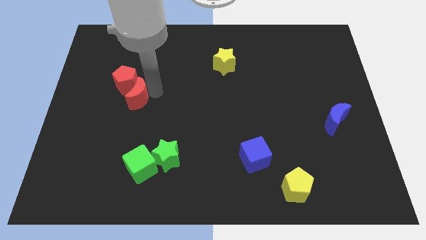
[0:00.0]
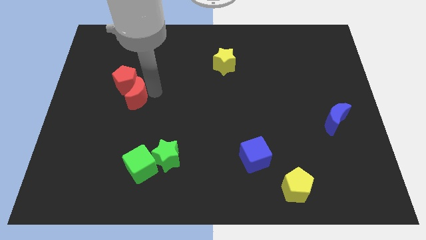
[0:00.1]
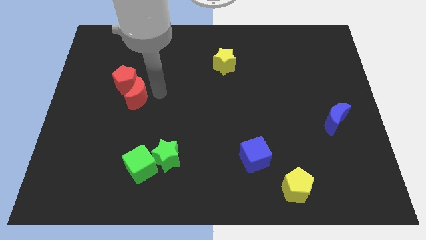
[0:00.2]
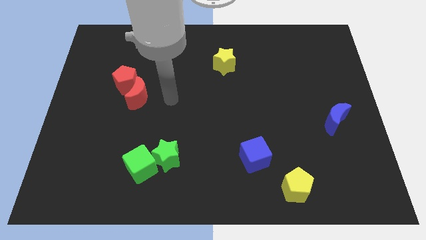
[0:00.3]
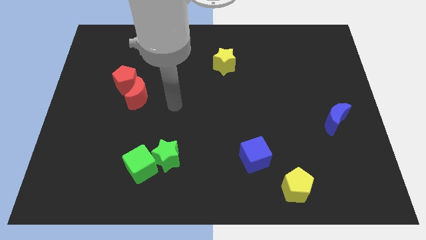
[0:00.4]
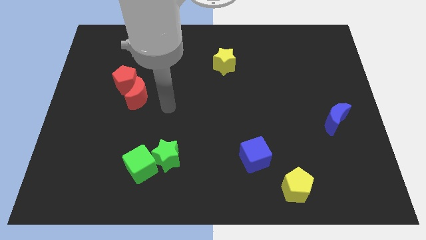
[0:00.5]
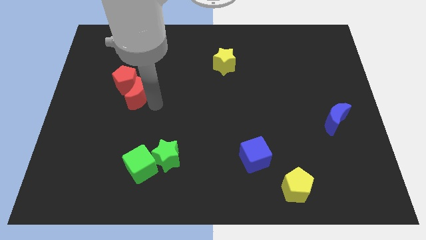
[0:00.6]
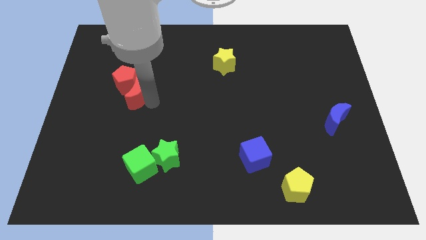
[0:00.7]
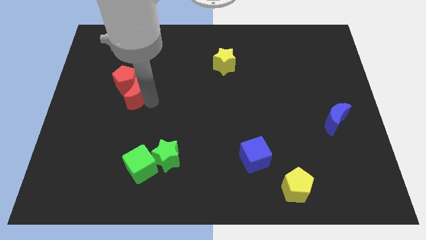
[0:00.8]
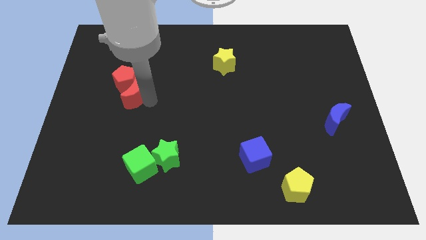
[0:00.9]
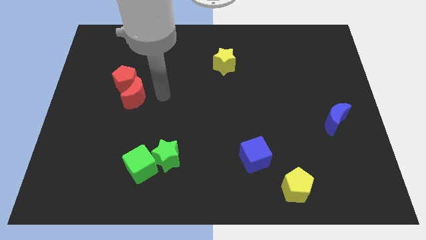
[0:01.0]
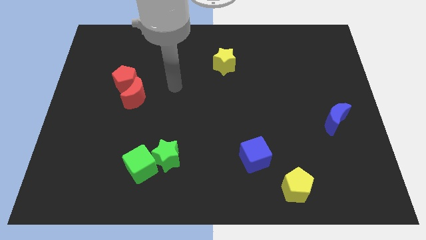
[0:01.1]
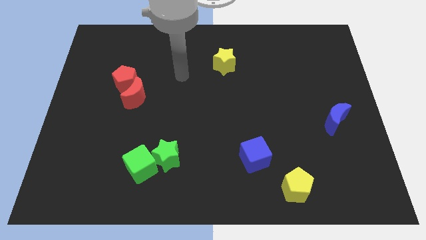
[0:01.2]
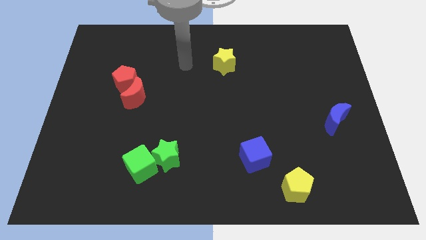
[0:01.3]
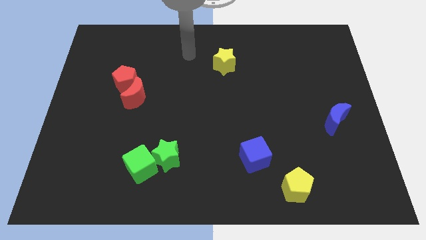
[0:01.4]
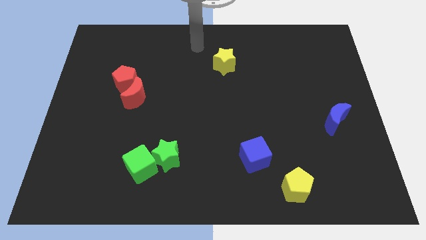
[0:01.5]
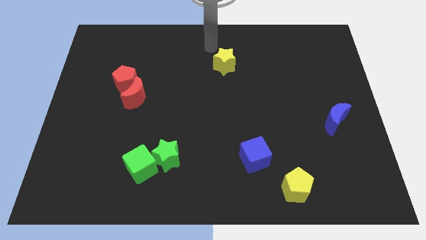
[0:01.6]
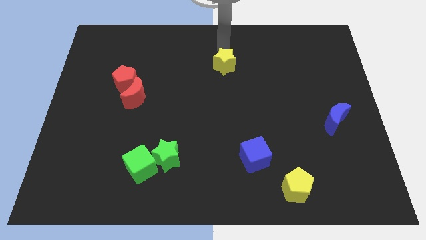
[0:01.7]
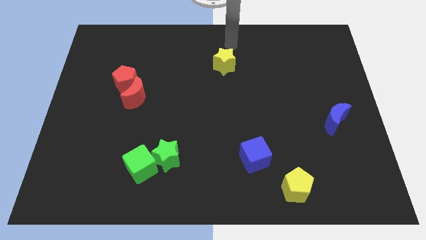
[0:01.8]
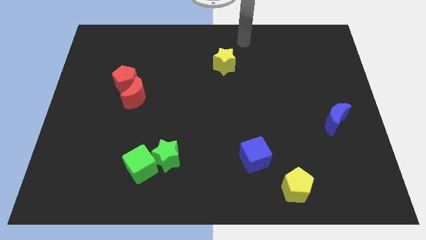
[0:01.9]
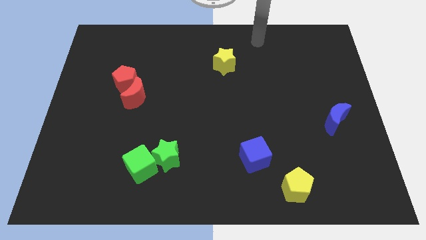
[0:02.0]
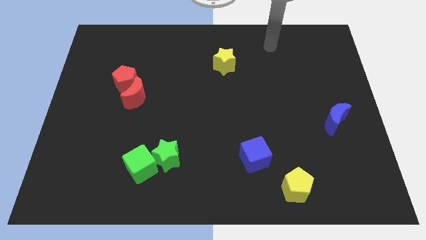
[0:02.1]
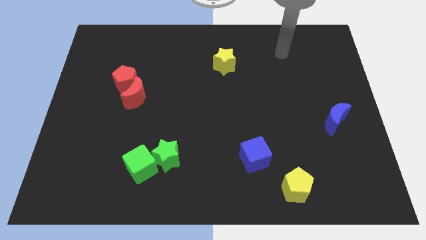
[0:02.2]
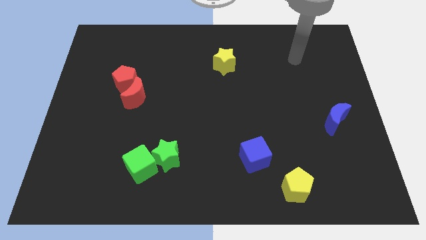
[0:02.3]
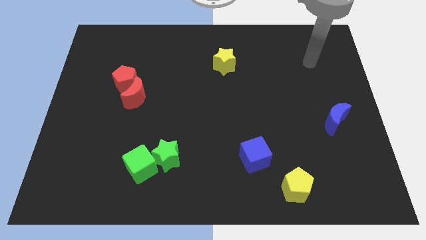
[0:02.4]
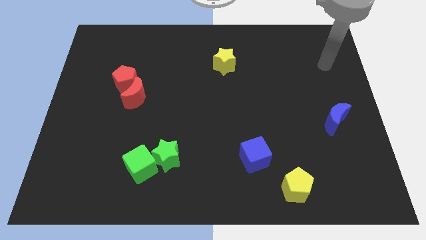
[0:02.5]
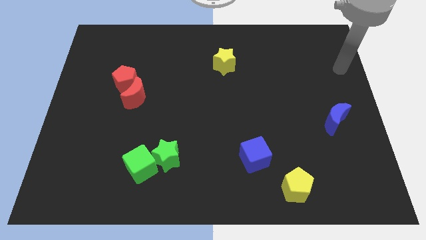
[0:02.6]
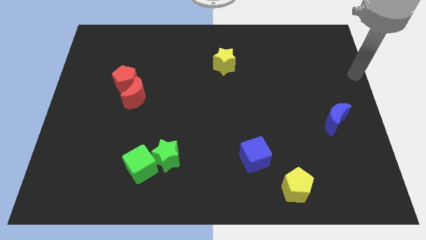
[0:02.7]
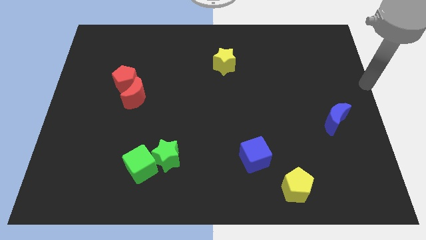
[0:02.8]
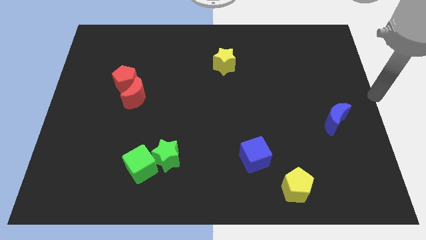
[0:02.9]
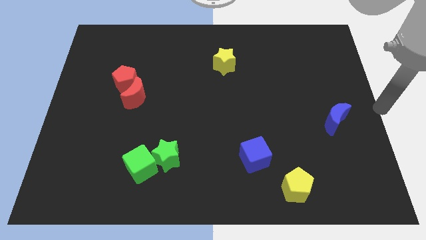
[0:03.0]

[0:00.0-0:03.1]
move your arm away from red moon

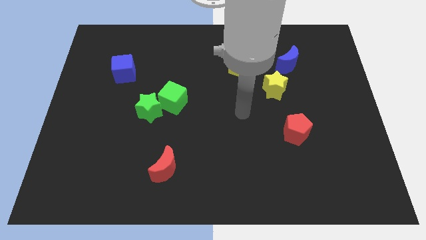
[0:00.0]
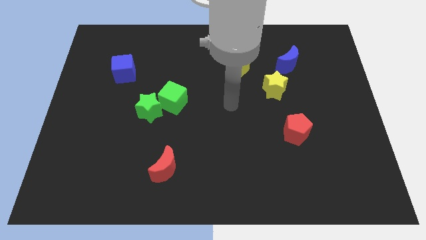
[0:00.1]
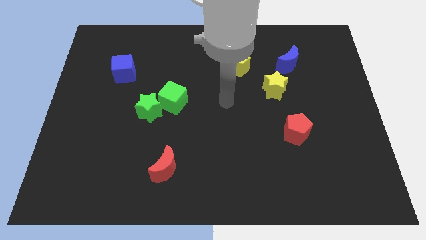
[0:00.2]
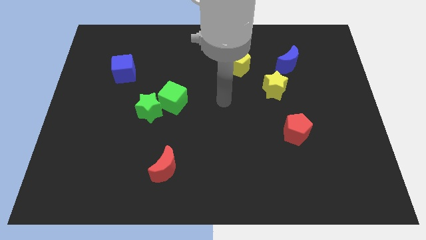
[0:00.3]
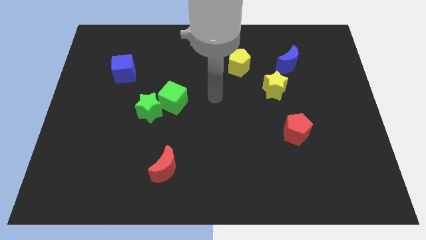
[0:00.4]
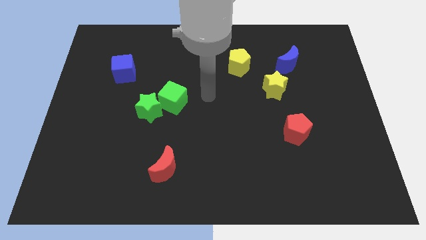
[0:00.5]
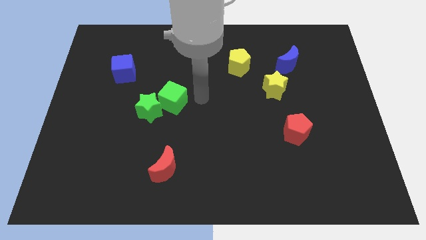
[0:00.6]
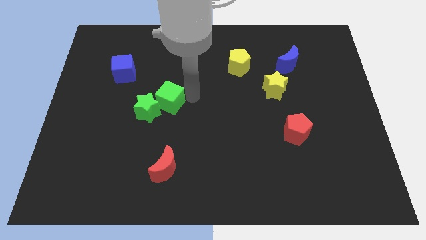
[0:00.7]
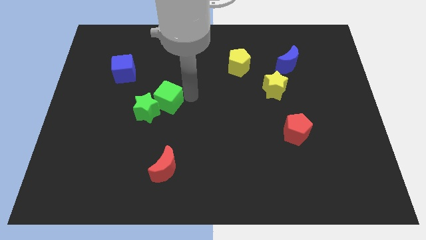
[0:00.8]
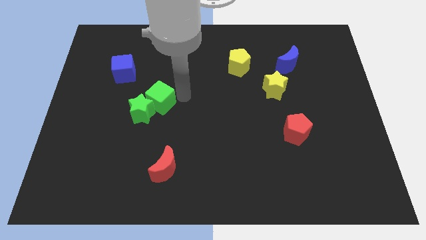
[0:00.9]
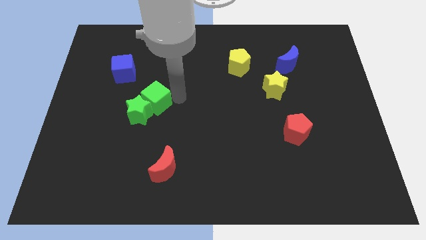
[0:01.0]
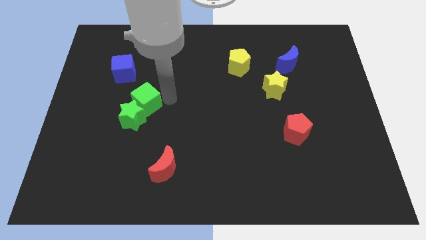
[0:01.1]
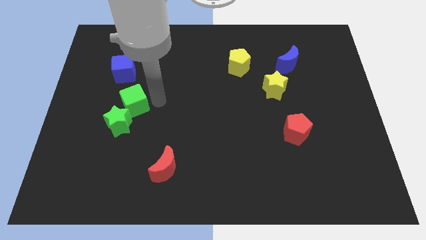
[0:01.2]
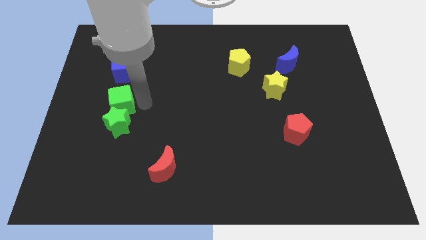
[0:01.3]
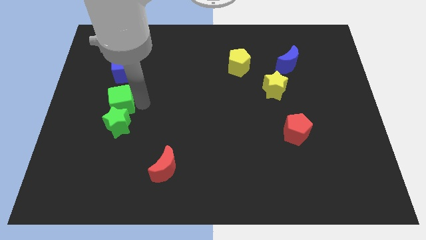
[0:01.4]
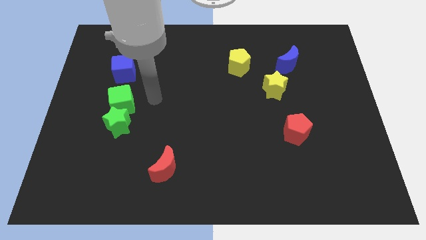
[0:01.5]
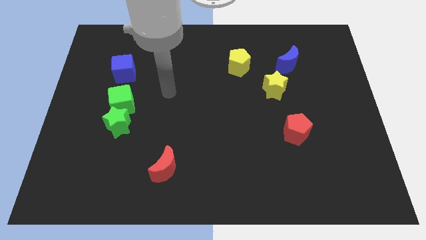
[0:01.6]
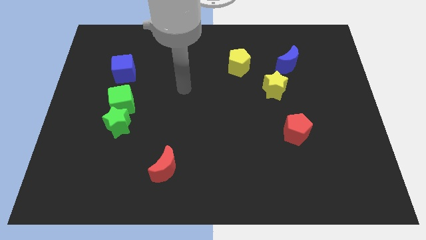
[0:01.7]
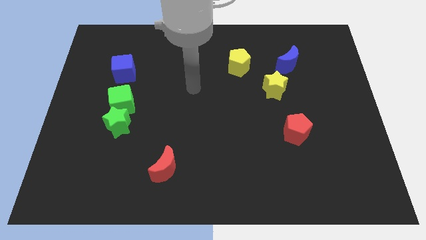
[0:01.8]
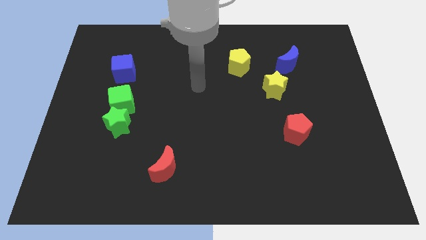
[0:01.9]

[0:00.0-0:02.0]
move the green cub to the top of the green star

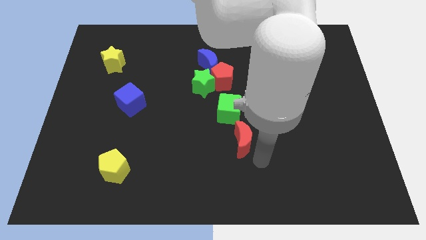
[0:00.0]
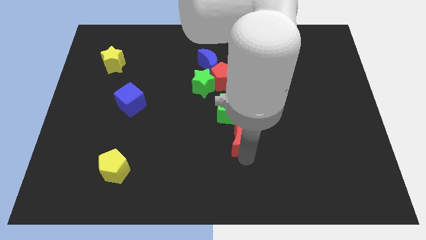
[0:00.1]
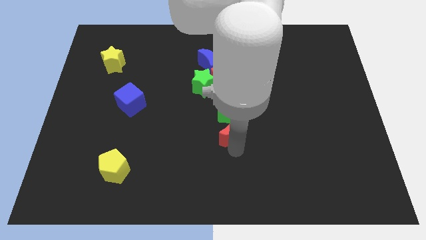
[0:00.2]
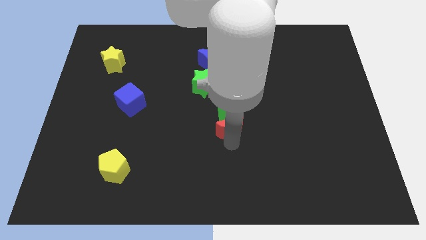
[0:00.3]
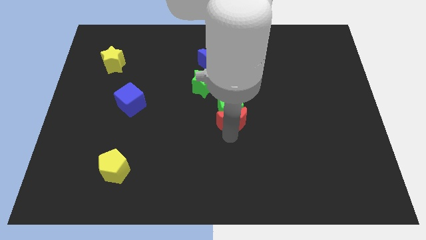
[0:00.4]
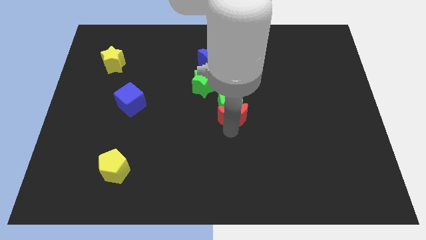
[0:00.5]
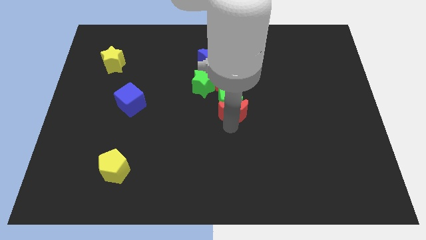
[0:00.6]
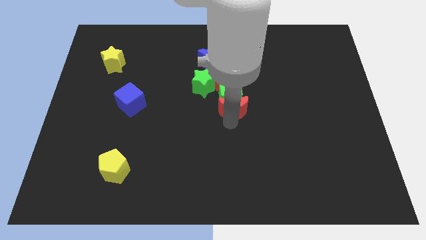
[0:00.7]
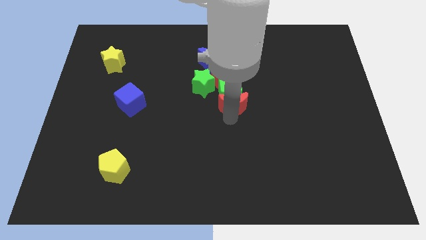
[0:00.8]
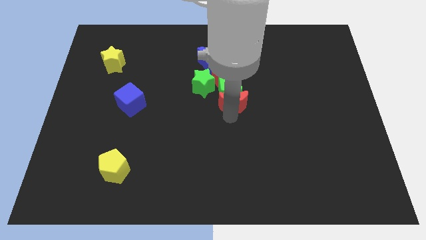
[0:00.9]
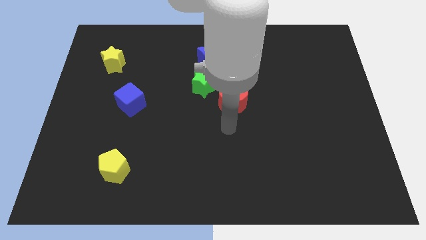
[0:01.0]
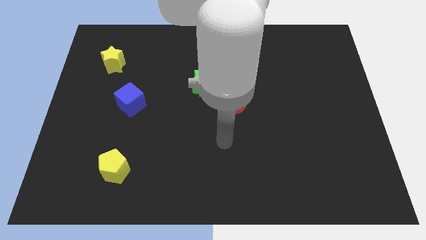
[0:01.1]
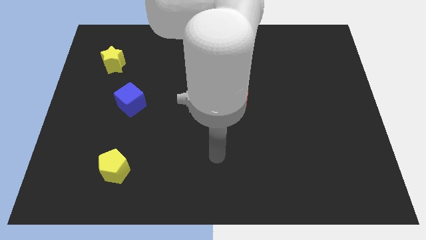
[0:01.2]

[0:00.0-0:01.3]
put the red moon and green cube together

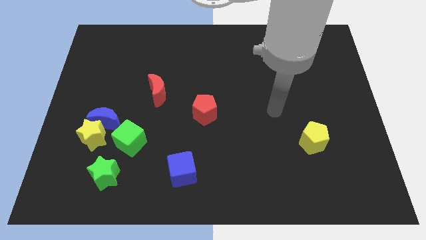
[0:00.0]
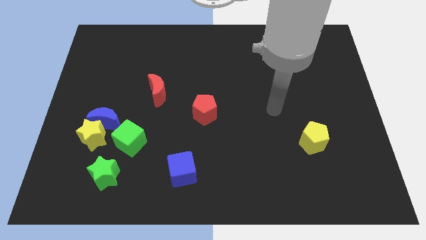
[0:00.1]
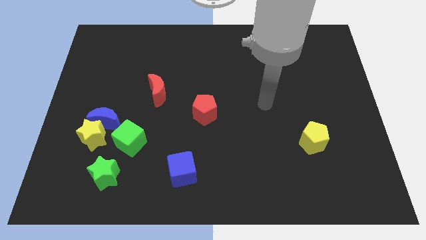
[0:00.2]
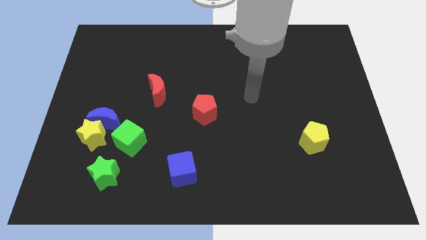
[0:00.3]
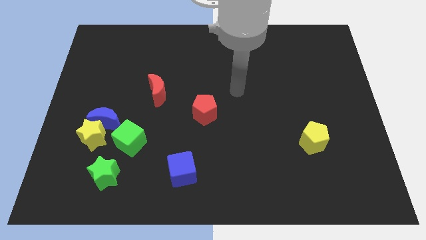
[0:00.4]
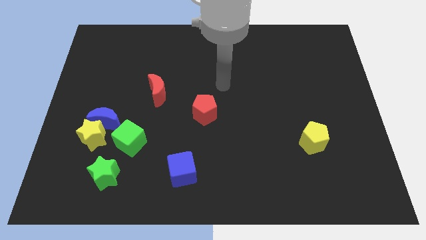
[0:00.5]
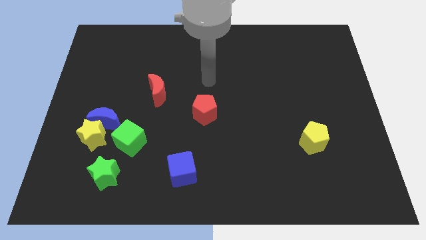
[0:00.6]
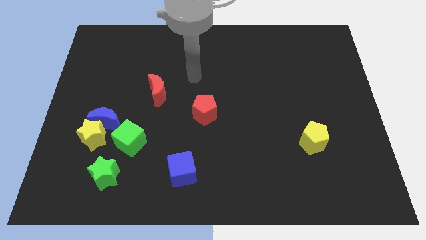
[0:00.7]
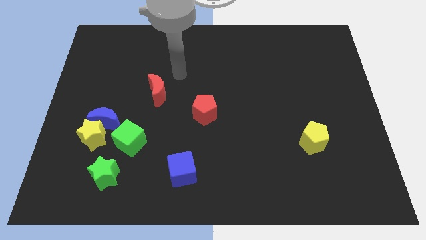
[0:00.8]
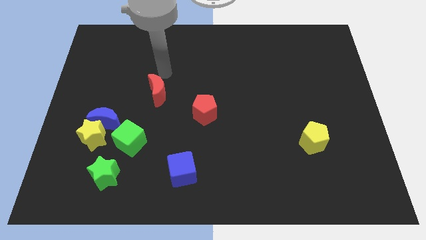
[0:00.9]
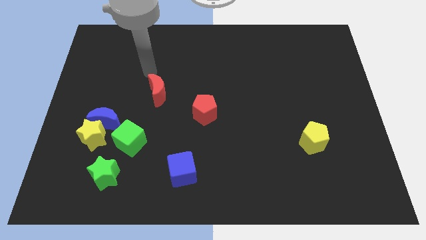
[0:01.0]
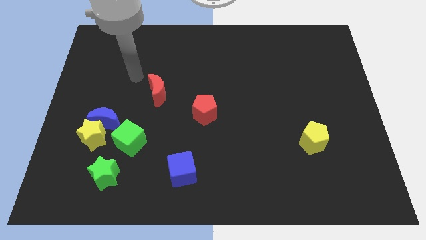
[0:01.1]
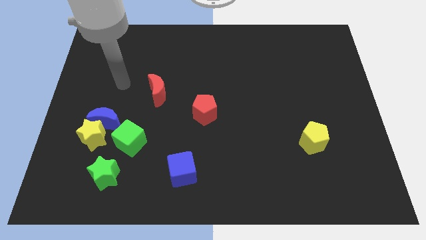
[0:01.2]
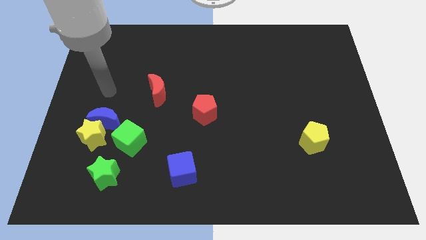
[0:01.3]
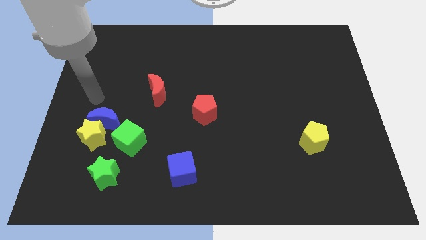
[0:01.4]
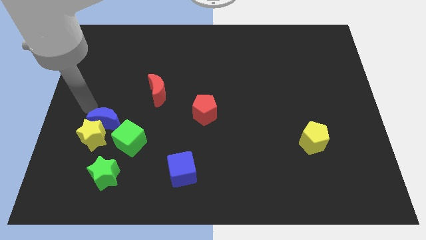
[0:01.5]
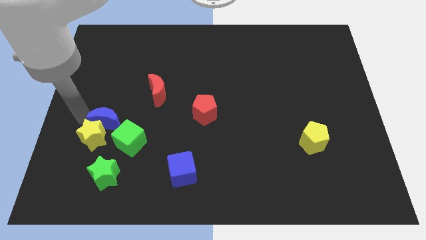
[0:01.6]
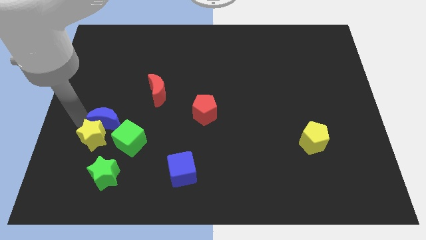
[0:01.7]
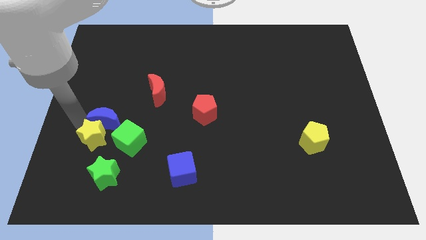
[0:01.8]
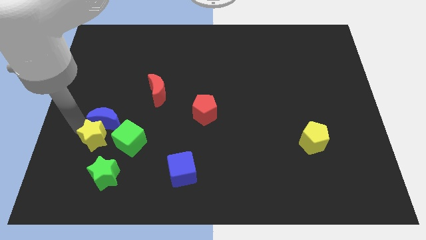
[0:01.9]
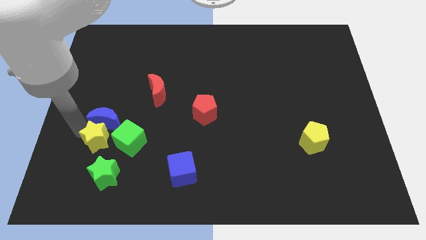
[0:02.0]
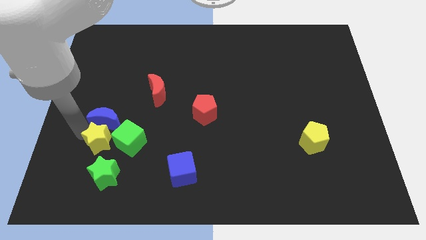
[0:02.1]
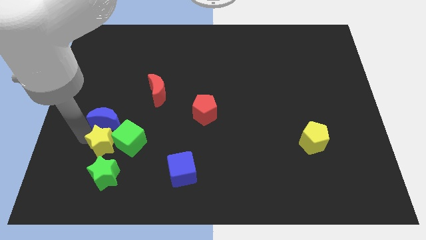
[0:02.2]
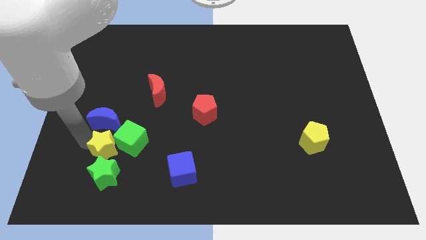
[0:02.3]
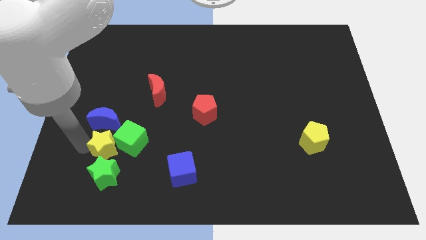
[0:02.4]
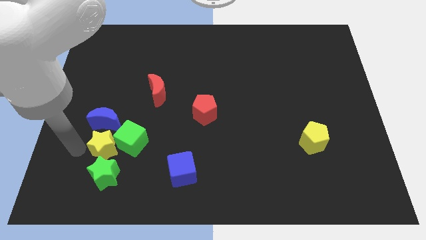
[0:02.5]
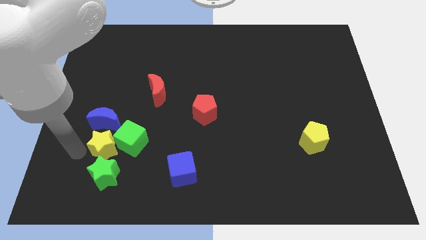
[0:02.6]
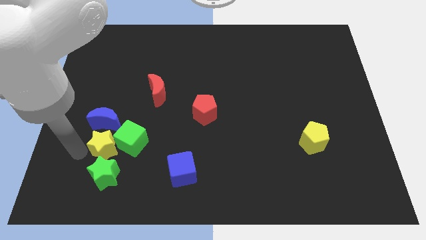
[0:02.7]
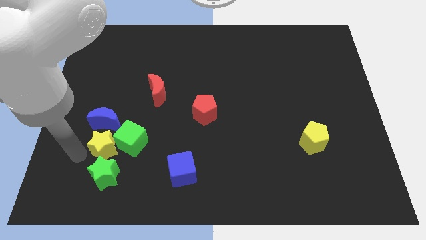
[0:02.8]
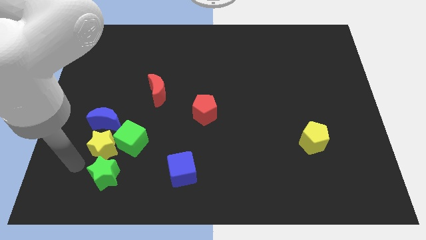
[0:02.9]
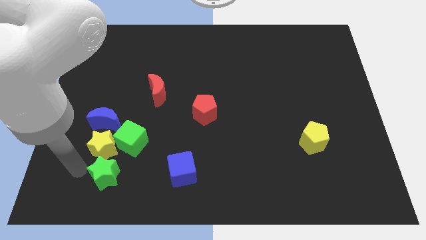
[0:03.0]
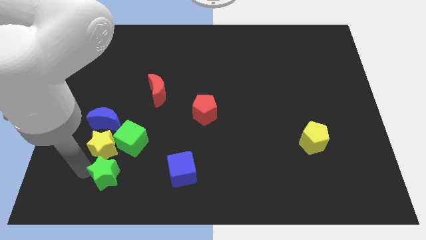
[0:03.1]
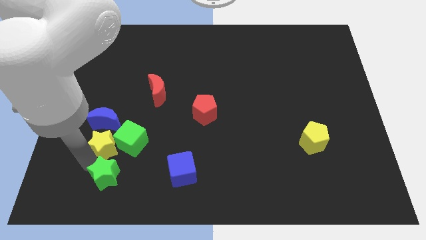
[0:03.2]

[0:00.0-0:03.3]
move the yellow star slightly
